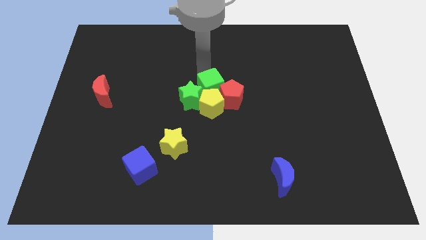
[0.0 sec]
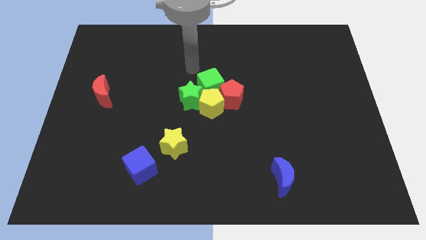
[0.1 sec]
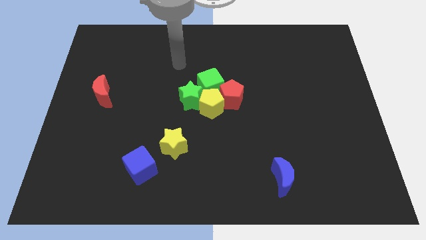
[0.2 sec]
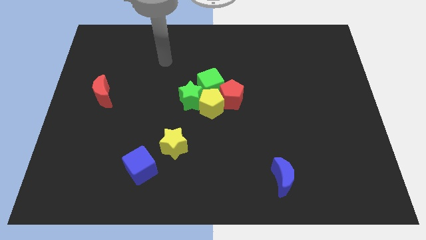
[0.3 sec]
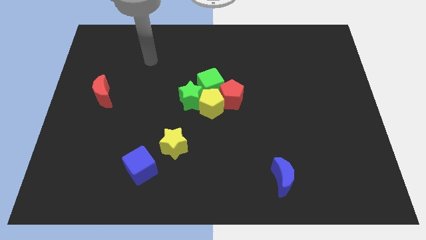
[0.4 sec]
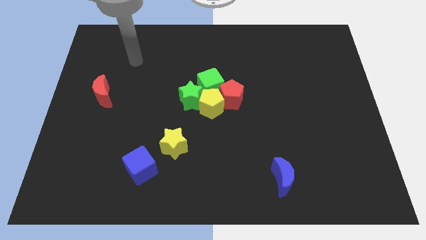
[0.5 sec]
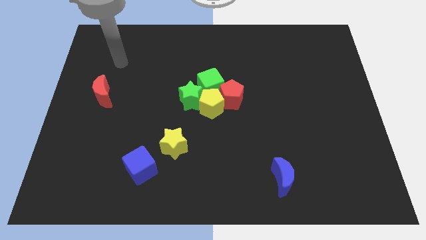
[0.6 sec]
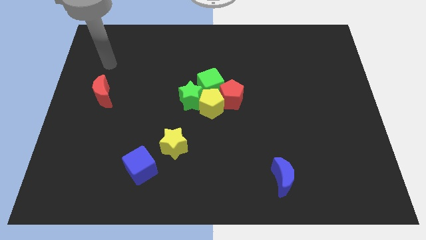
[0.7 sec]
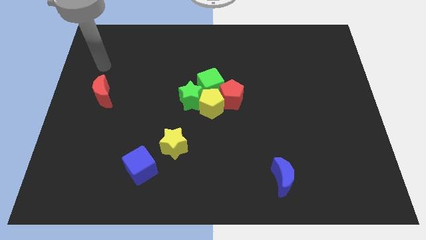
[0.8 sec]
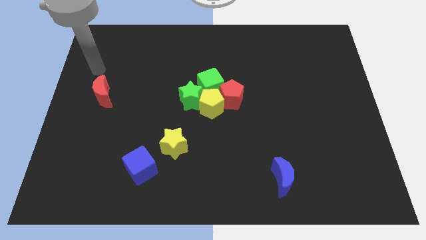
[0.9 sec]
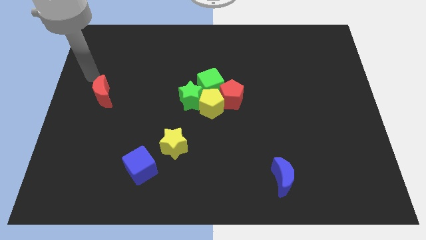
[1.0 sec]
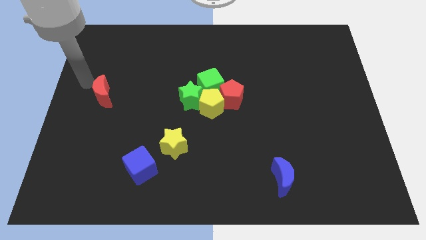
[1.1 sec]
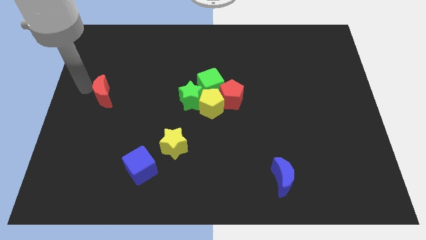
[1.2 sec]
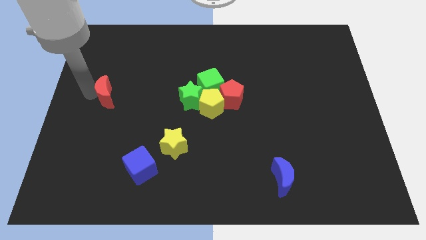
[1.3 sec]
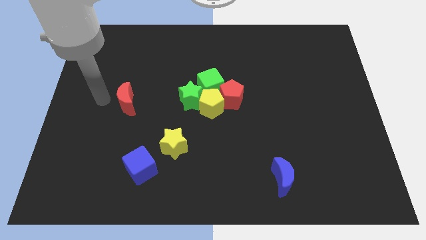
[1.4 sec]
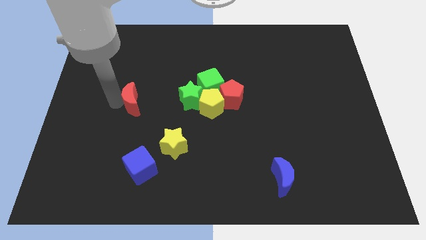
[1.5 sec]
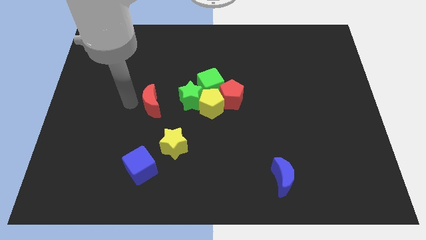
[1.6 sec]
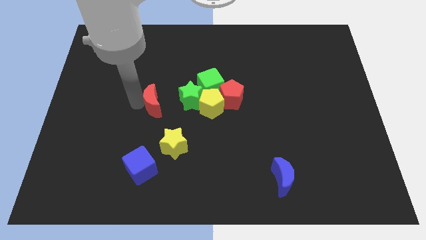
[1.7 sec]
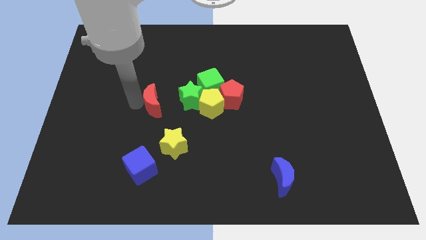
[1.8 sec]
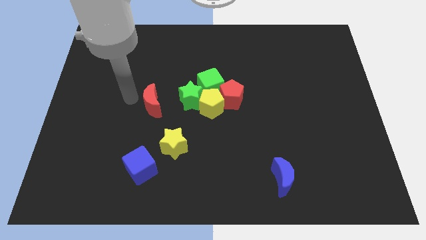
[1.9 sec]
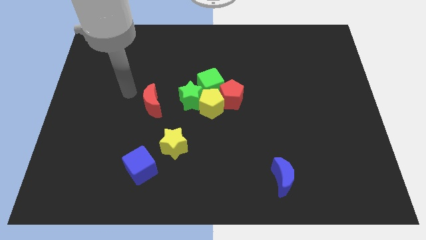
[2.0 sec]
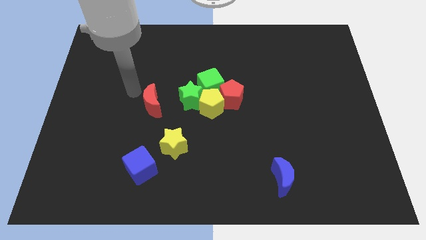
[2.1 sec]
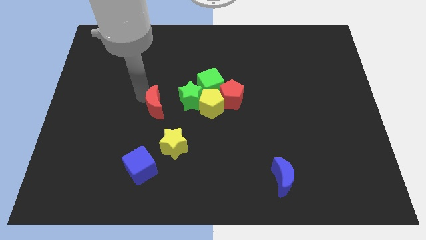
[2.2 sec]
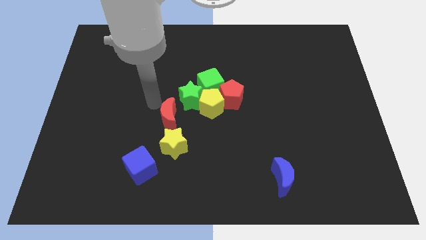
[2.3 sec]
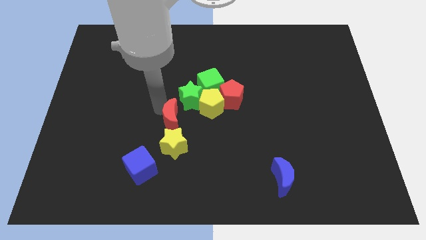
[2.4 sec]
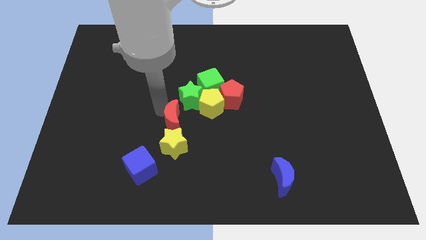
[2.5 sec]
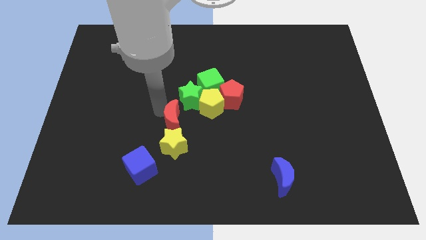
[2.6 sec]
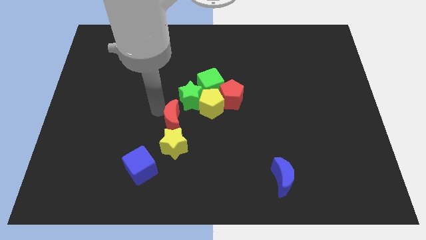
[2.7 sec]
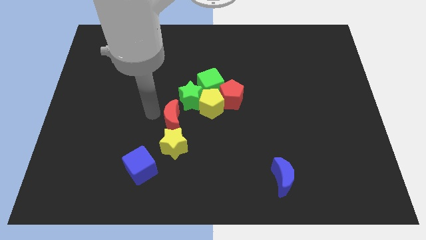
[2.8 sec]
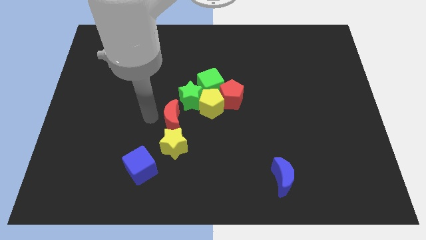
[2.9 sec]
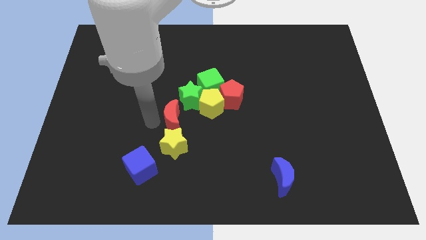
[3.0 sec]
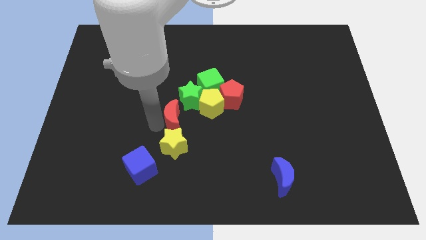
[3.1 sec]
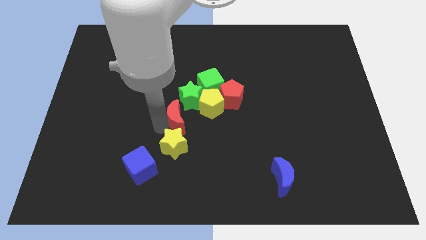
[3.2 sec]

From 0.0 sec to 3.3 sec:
move the red crescent above to the yellow star

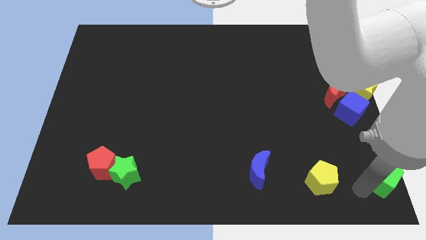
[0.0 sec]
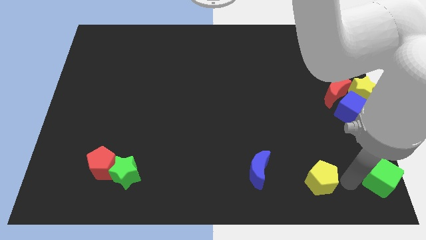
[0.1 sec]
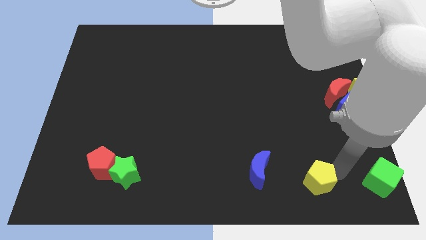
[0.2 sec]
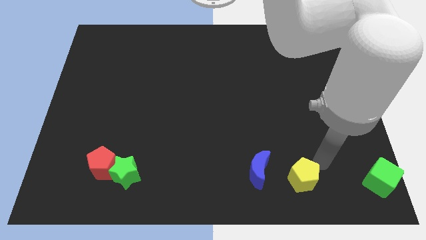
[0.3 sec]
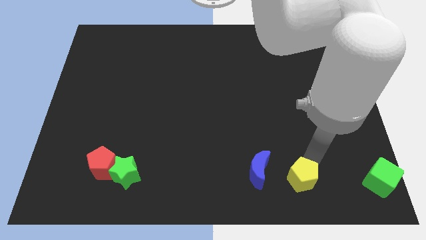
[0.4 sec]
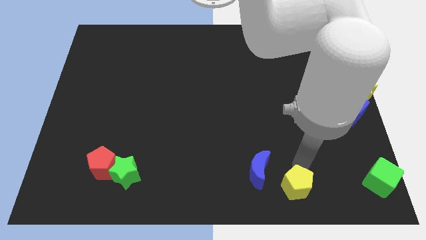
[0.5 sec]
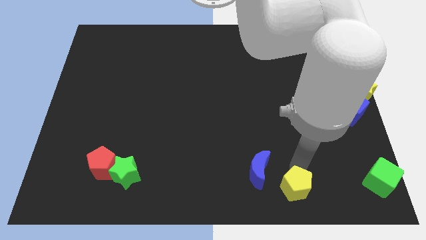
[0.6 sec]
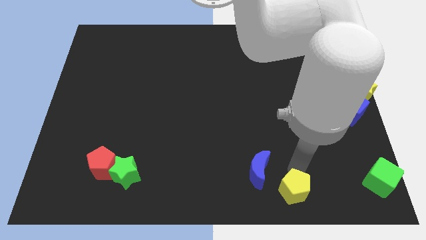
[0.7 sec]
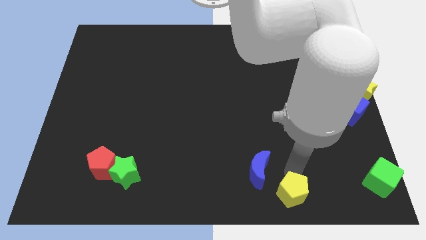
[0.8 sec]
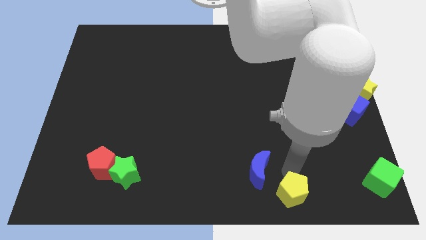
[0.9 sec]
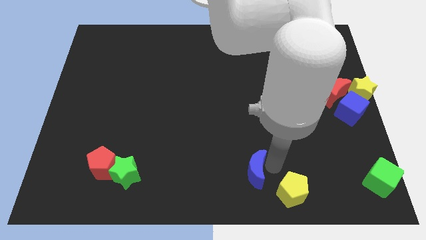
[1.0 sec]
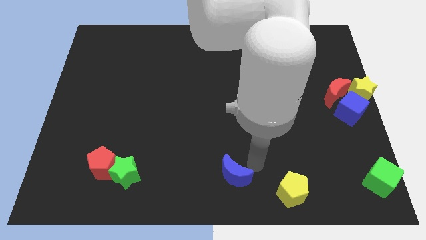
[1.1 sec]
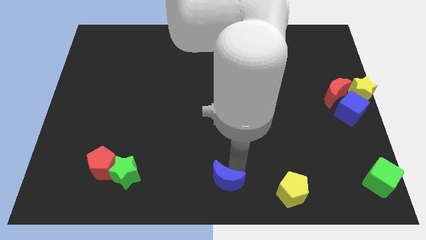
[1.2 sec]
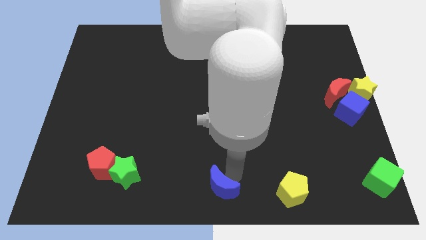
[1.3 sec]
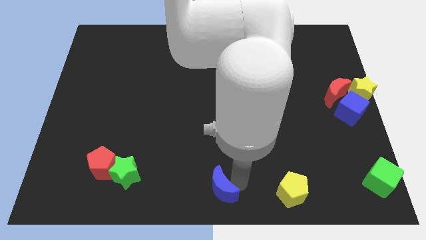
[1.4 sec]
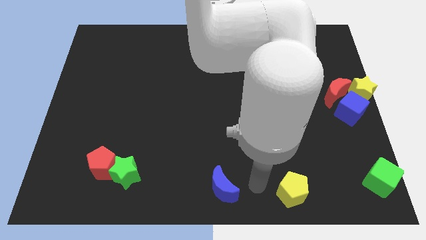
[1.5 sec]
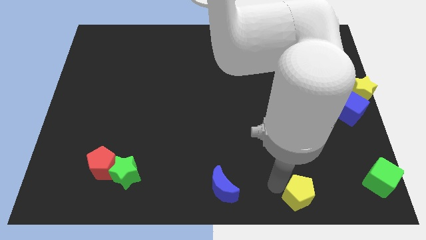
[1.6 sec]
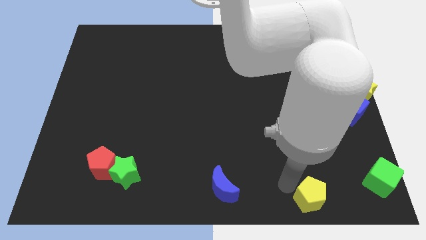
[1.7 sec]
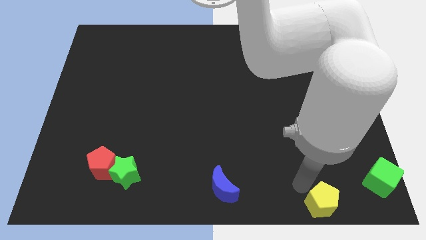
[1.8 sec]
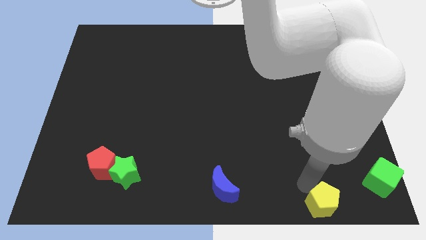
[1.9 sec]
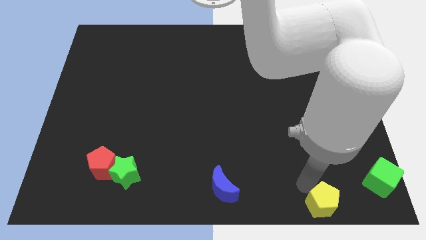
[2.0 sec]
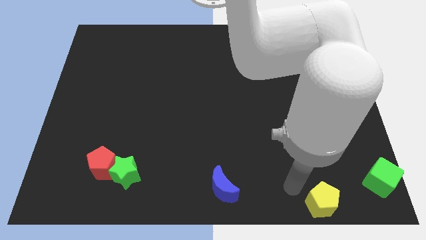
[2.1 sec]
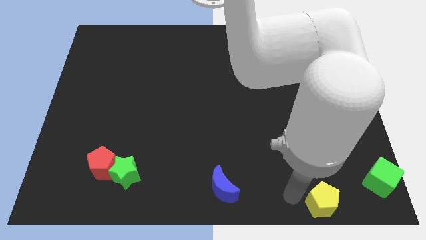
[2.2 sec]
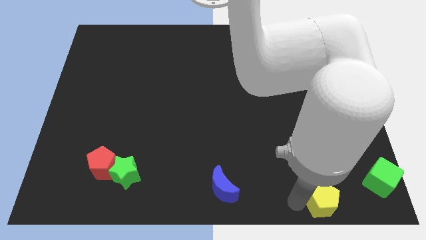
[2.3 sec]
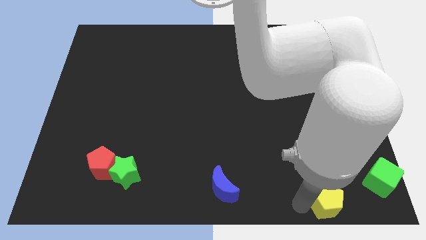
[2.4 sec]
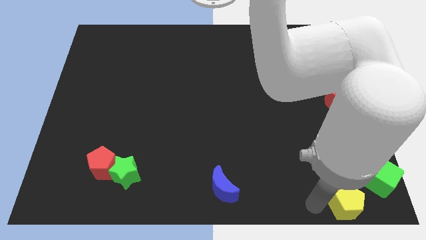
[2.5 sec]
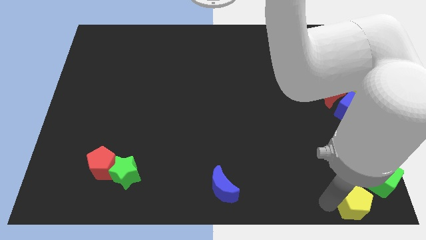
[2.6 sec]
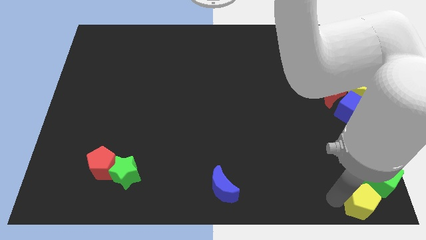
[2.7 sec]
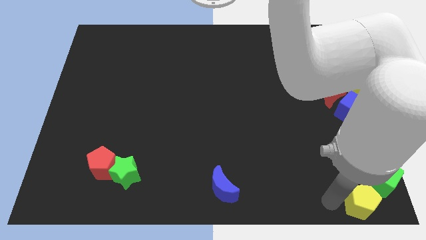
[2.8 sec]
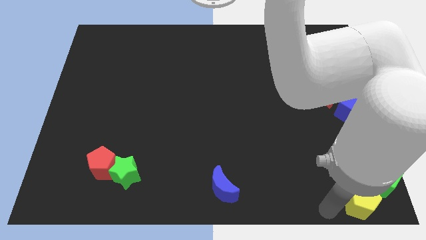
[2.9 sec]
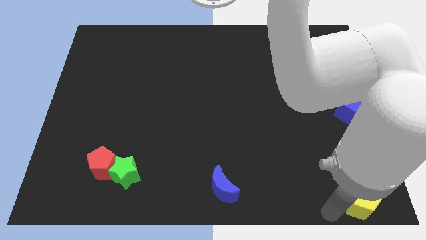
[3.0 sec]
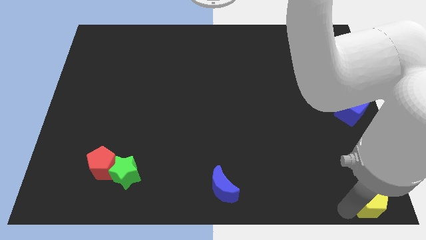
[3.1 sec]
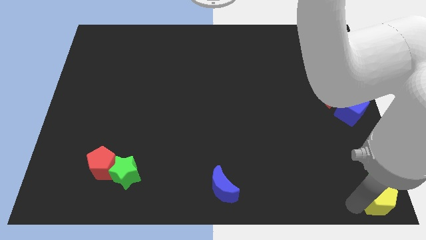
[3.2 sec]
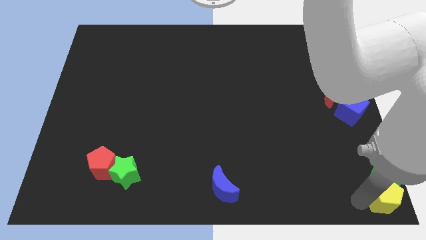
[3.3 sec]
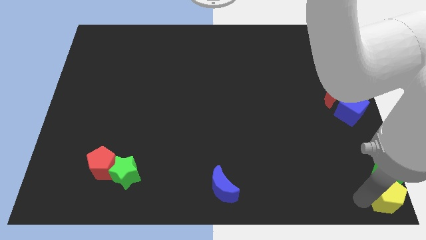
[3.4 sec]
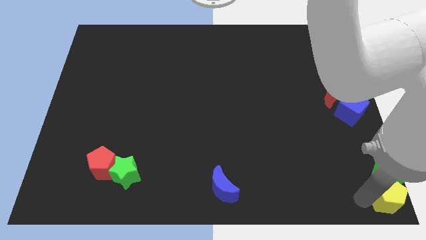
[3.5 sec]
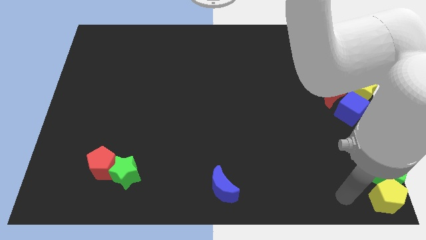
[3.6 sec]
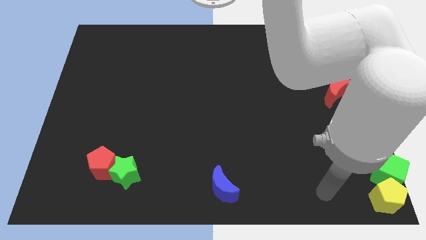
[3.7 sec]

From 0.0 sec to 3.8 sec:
move yellow pentagon to the bottom side of the green cube

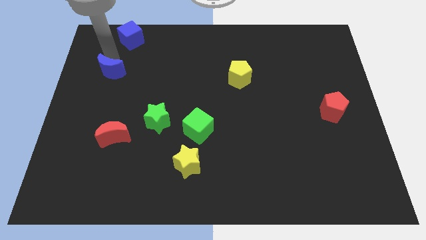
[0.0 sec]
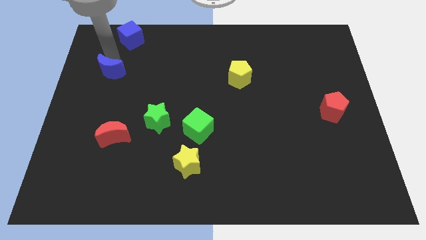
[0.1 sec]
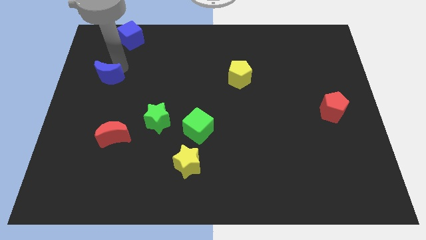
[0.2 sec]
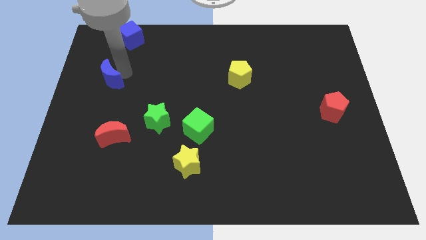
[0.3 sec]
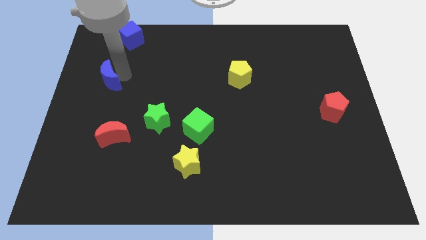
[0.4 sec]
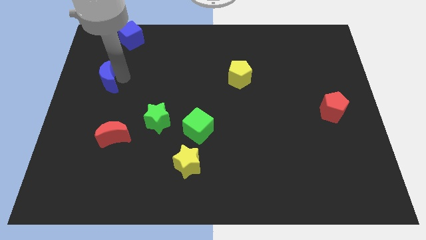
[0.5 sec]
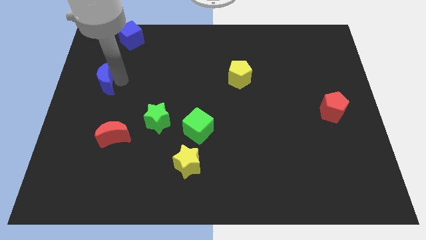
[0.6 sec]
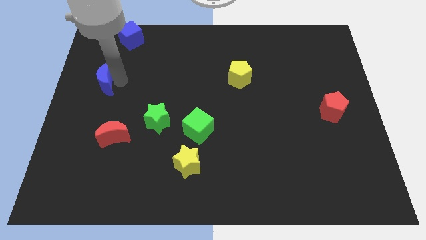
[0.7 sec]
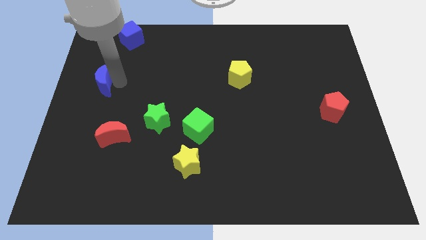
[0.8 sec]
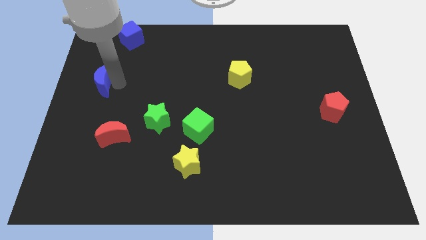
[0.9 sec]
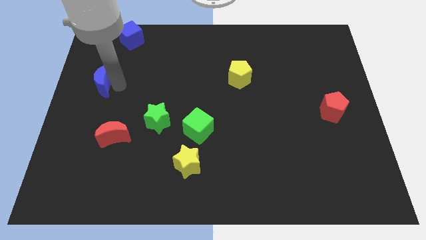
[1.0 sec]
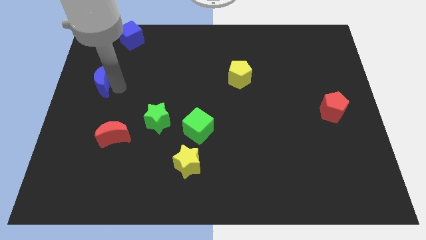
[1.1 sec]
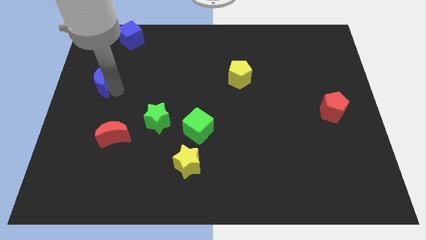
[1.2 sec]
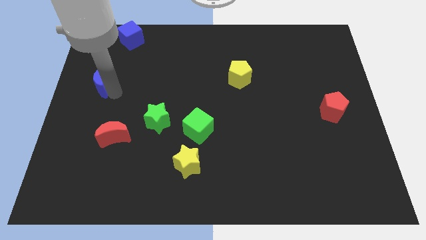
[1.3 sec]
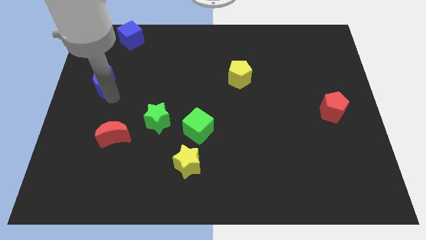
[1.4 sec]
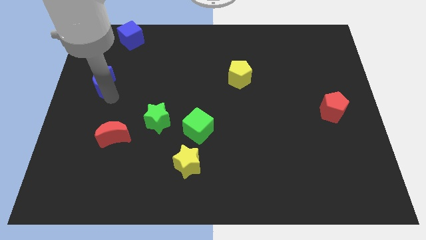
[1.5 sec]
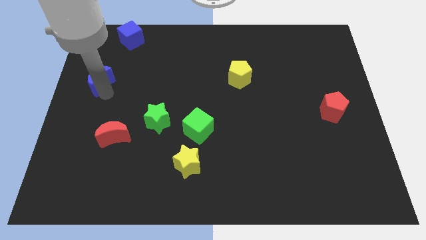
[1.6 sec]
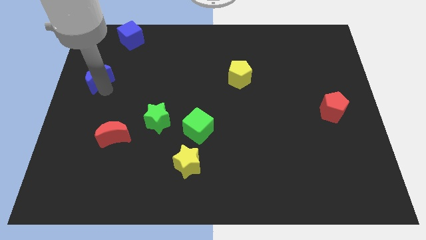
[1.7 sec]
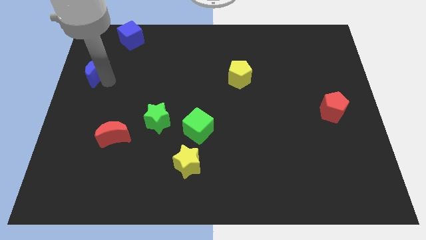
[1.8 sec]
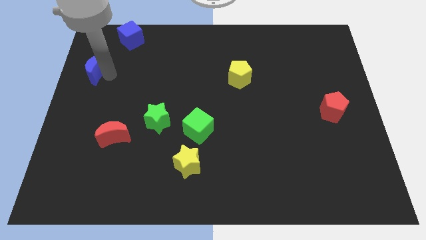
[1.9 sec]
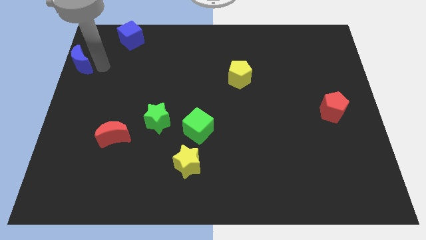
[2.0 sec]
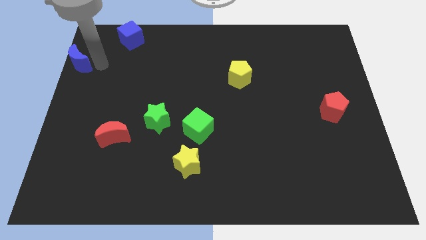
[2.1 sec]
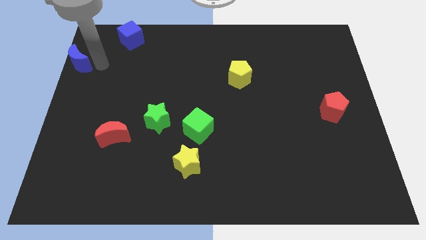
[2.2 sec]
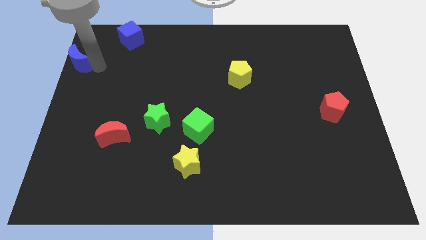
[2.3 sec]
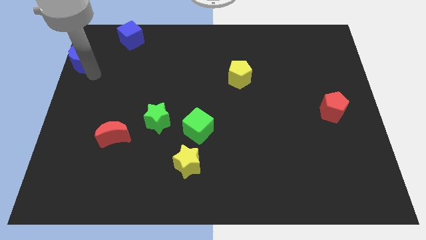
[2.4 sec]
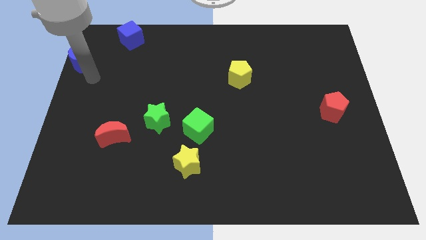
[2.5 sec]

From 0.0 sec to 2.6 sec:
place the blue crescent diagonal to the red crescent
